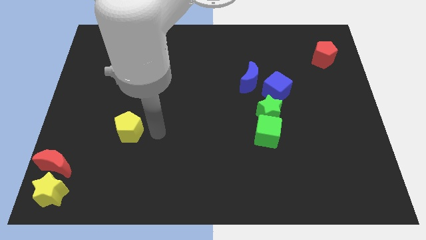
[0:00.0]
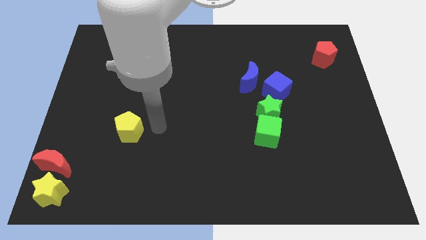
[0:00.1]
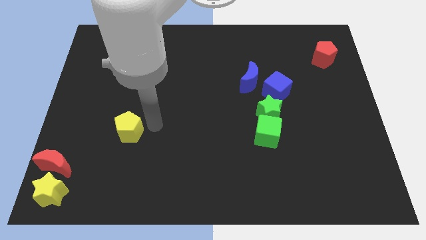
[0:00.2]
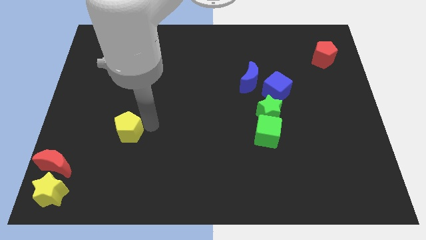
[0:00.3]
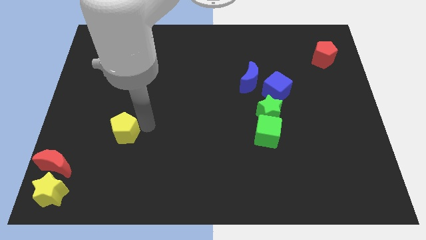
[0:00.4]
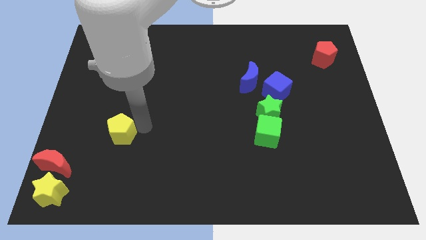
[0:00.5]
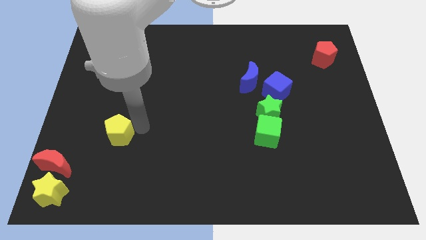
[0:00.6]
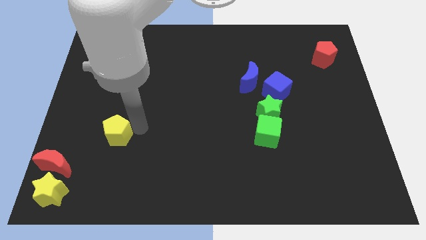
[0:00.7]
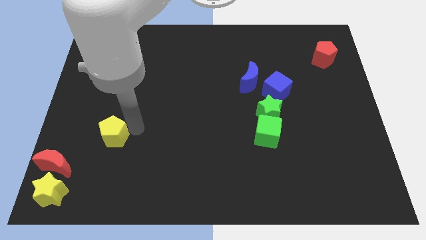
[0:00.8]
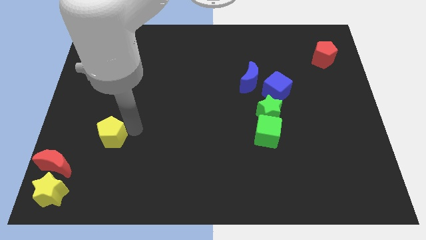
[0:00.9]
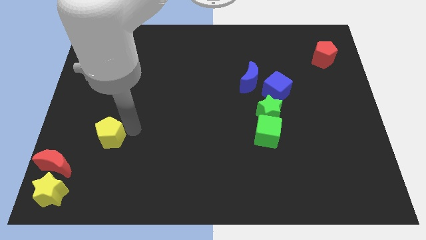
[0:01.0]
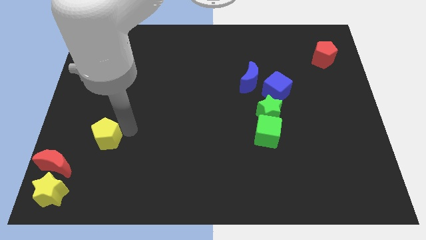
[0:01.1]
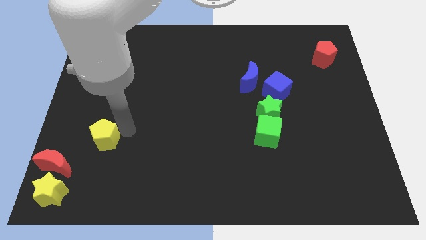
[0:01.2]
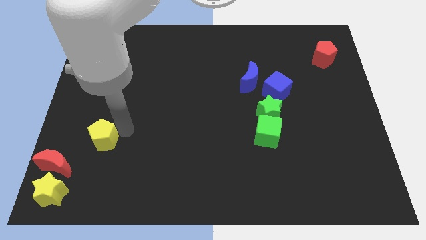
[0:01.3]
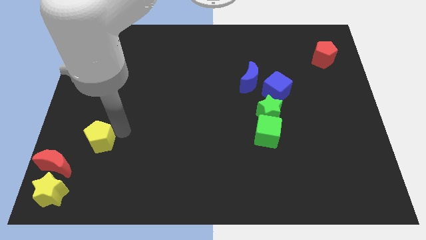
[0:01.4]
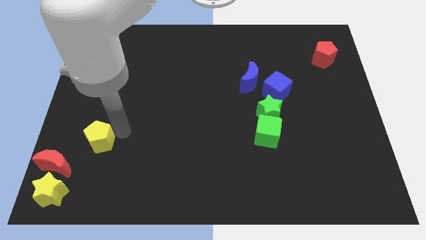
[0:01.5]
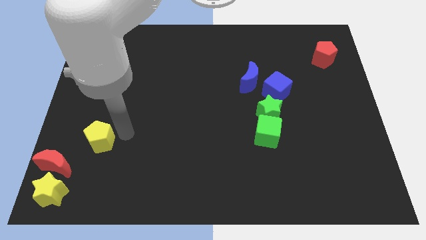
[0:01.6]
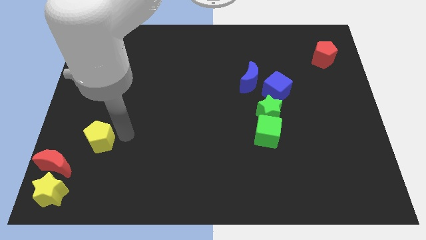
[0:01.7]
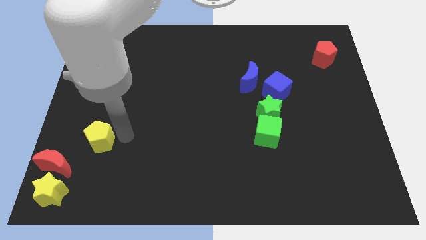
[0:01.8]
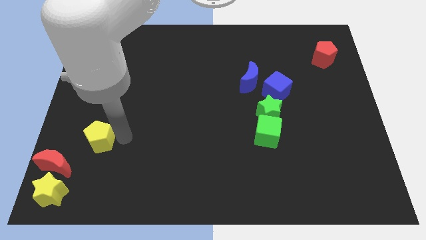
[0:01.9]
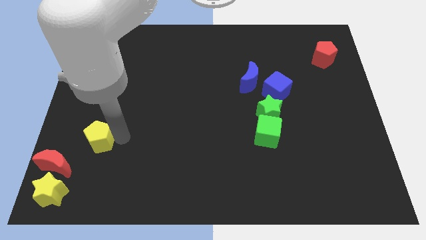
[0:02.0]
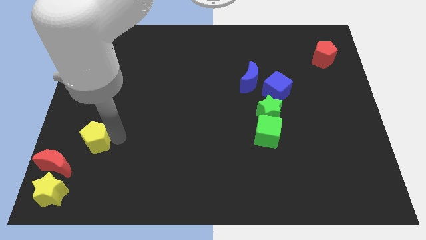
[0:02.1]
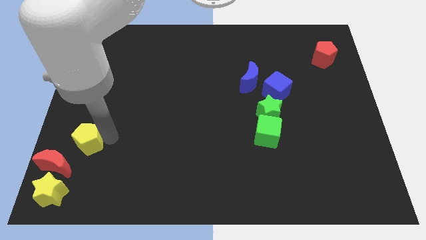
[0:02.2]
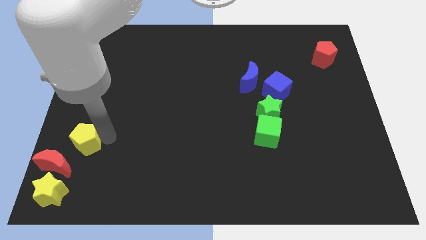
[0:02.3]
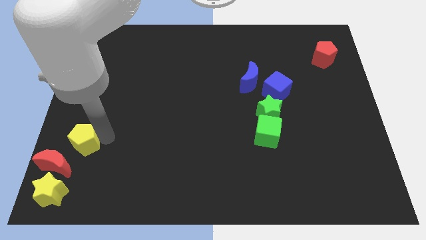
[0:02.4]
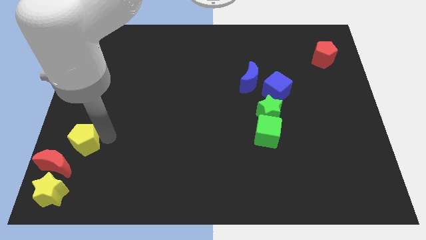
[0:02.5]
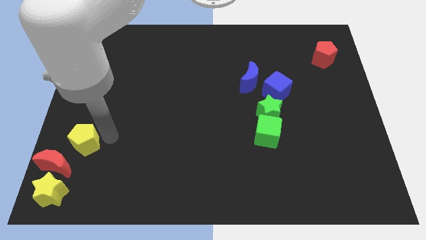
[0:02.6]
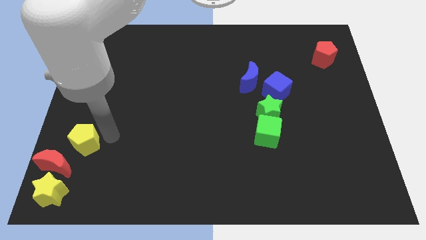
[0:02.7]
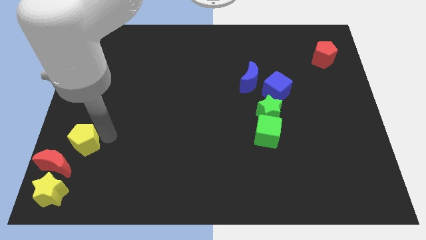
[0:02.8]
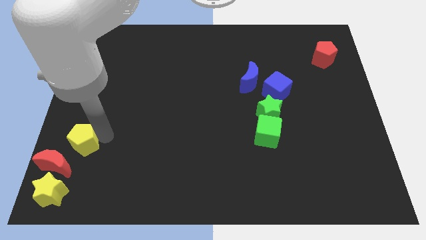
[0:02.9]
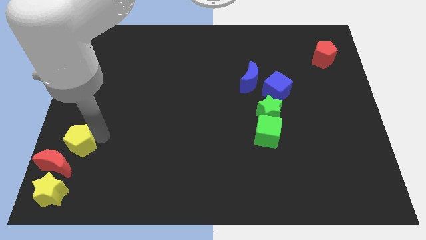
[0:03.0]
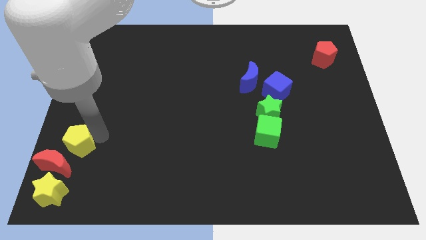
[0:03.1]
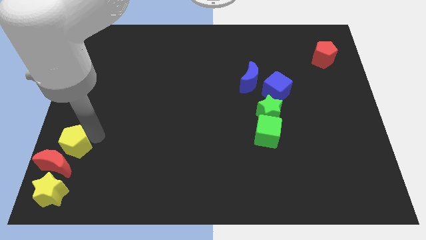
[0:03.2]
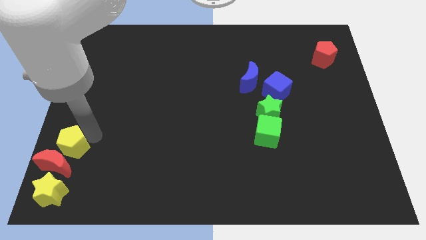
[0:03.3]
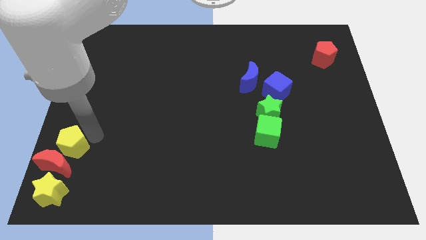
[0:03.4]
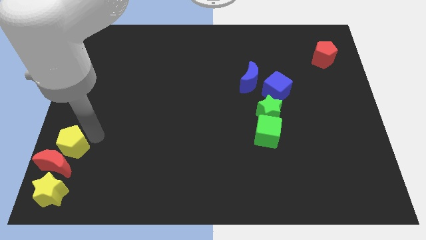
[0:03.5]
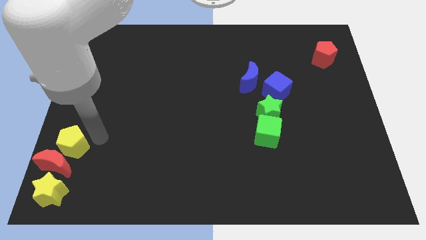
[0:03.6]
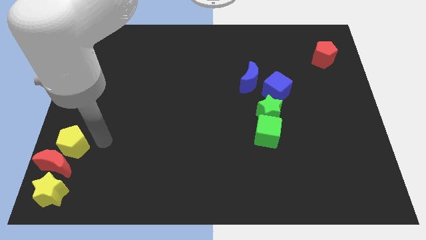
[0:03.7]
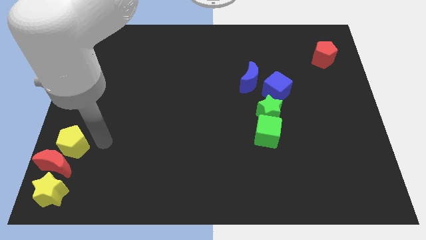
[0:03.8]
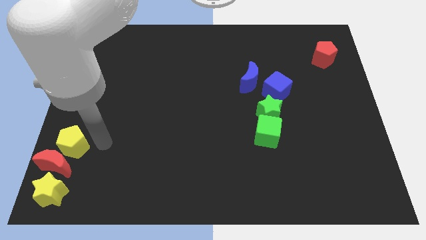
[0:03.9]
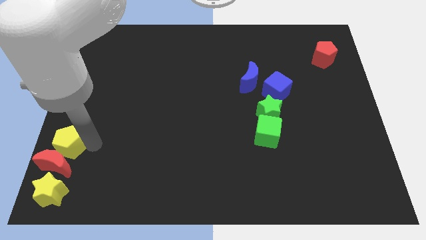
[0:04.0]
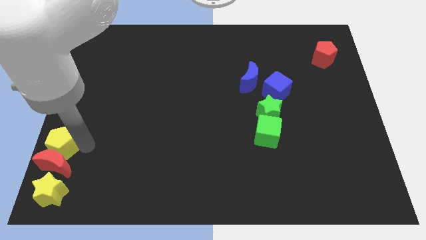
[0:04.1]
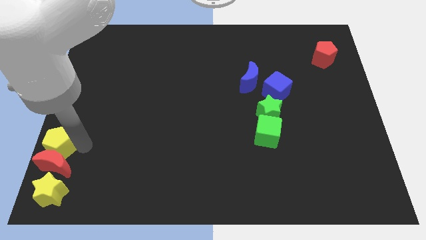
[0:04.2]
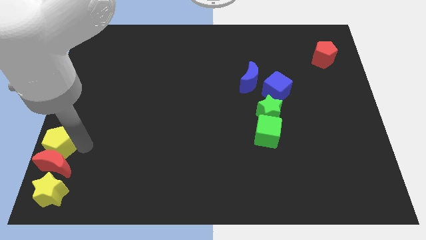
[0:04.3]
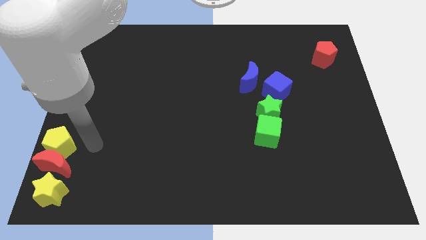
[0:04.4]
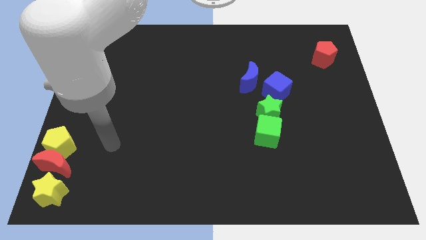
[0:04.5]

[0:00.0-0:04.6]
place yellow pentagon to the top of red moon

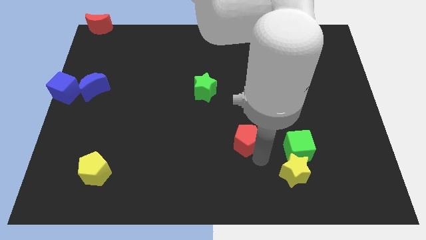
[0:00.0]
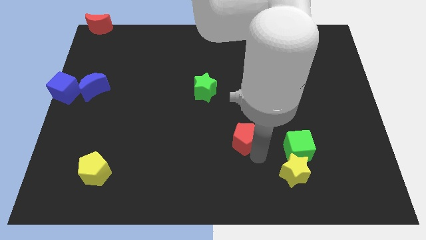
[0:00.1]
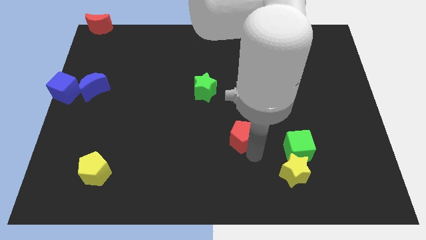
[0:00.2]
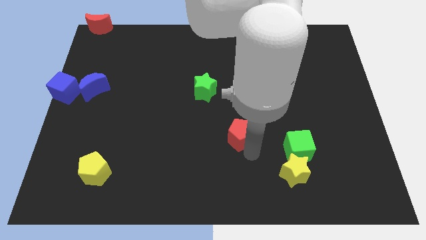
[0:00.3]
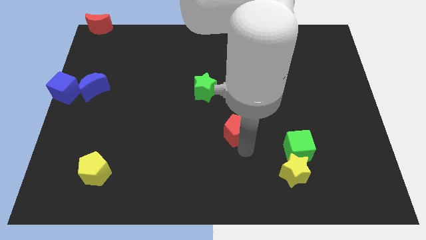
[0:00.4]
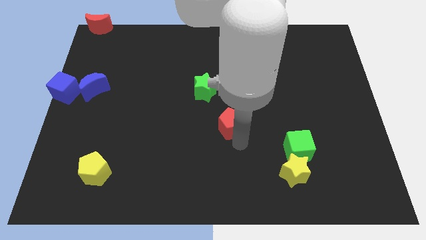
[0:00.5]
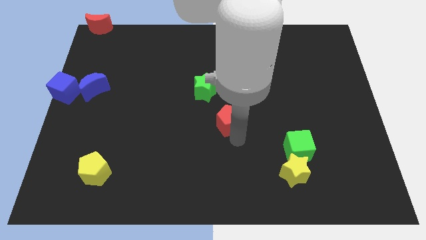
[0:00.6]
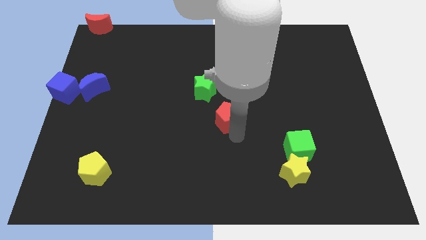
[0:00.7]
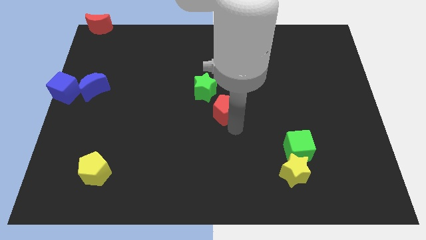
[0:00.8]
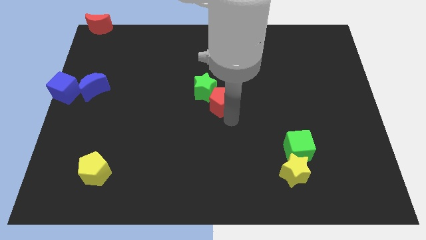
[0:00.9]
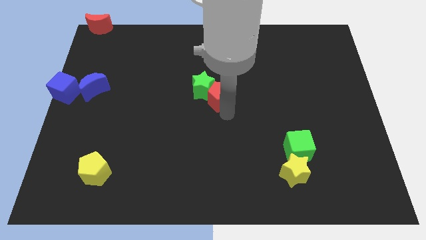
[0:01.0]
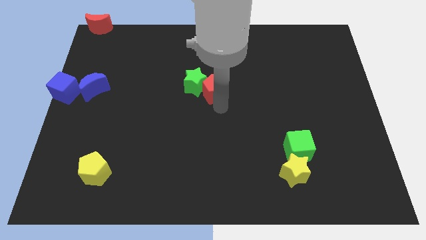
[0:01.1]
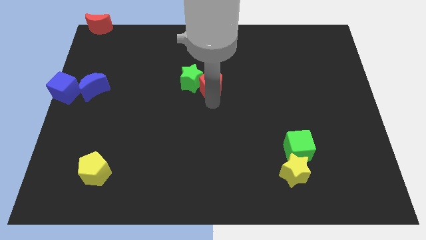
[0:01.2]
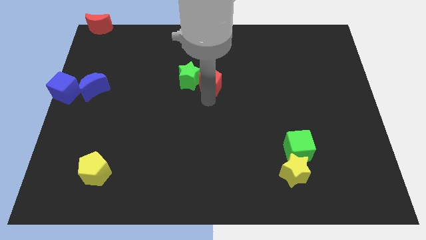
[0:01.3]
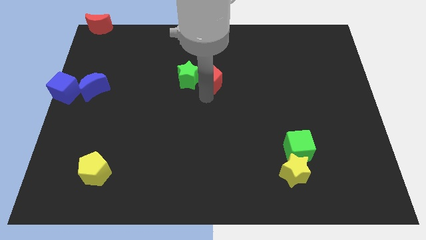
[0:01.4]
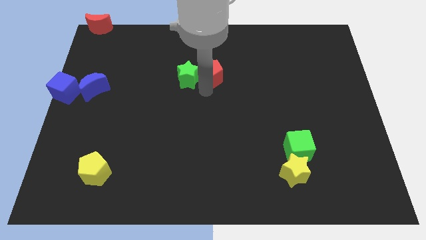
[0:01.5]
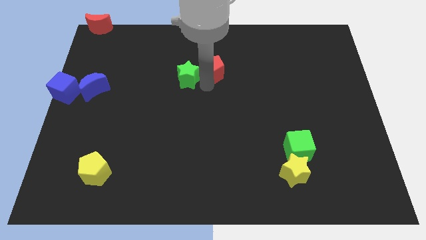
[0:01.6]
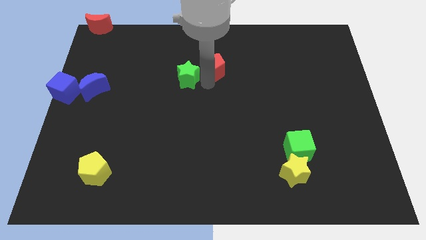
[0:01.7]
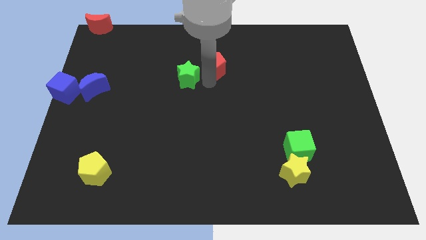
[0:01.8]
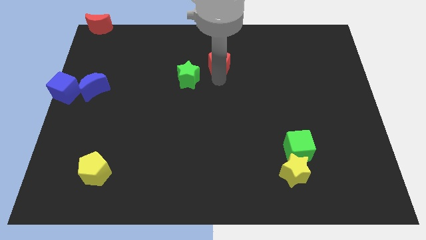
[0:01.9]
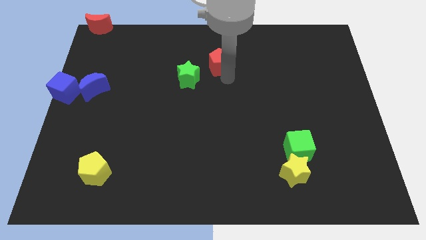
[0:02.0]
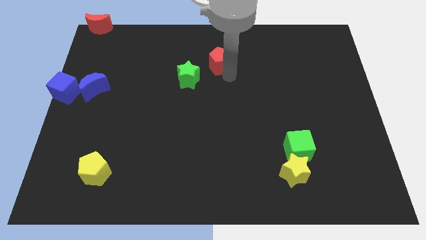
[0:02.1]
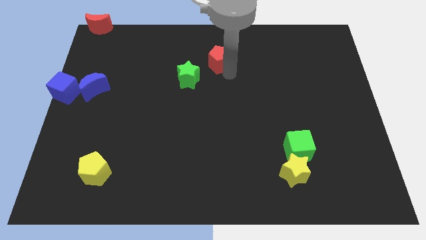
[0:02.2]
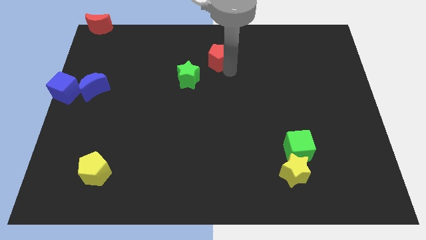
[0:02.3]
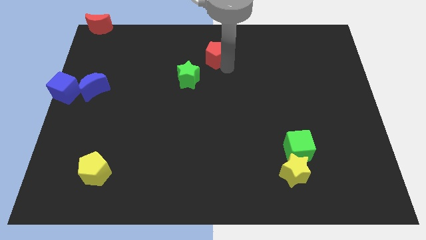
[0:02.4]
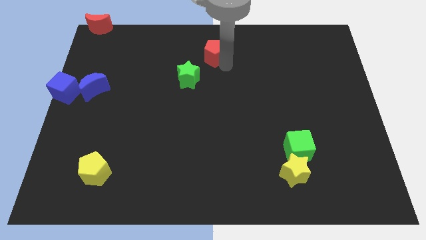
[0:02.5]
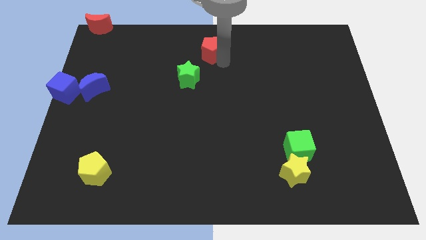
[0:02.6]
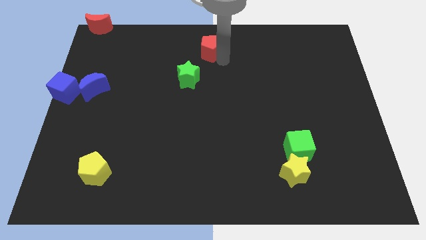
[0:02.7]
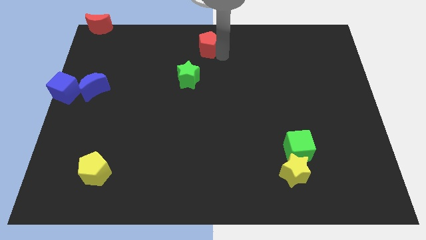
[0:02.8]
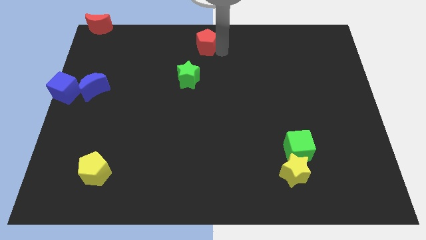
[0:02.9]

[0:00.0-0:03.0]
move the red pentagon diagonal above the green star

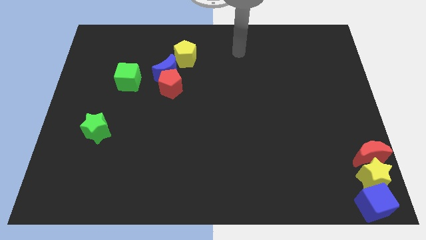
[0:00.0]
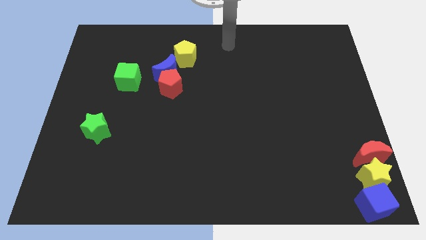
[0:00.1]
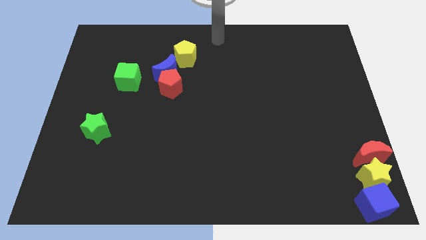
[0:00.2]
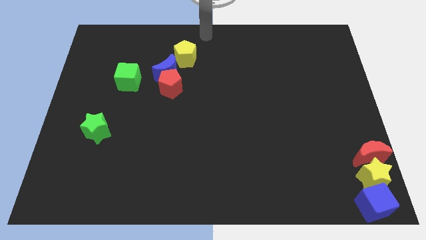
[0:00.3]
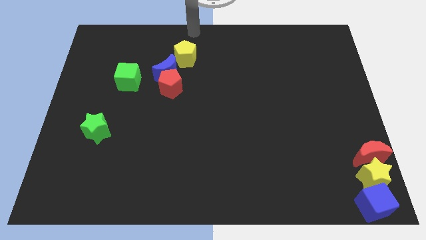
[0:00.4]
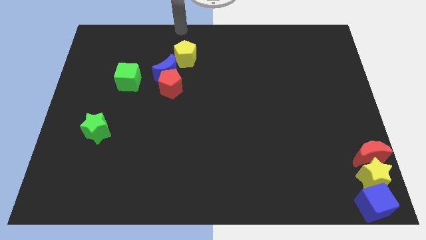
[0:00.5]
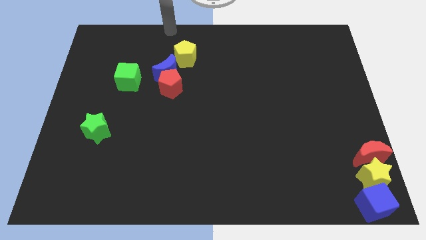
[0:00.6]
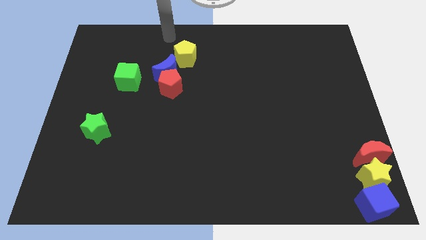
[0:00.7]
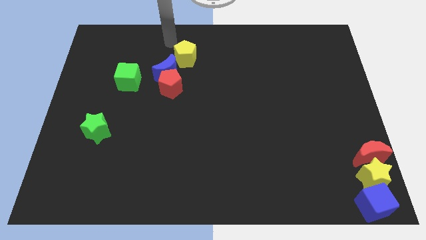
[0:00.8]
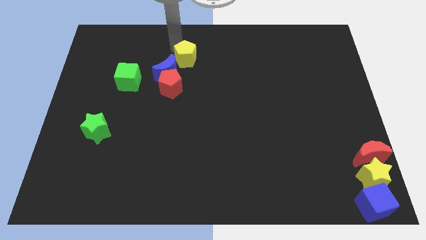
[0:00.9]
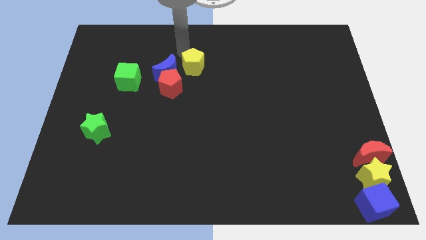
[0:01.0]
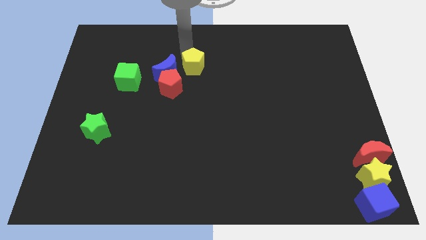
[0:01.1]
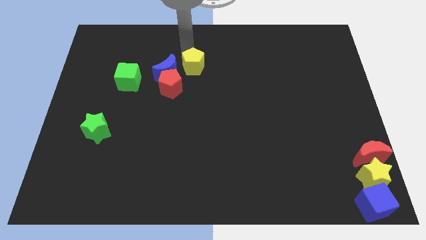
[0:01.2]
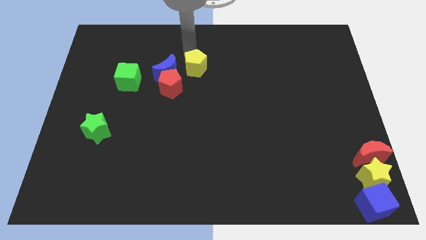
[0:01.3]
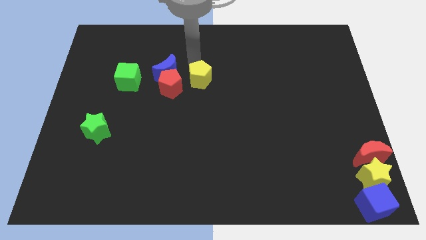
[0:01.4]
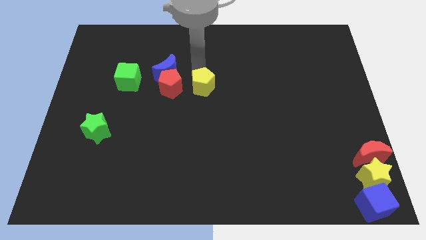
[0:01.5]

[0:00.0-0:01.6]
move the yellow pentagon to the right of red pentagon
